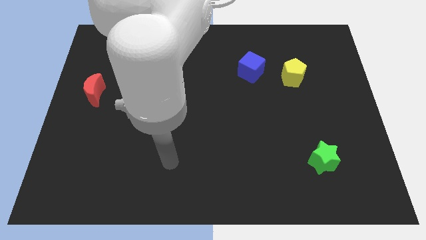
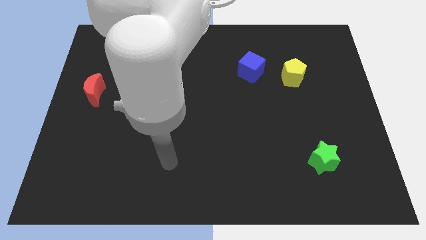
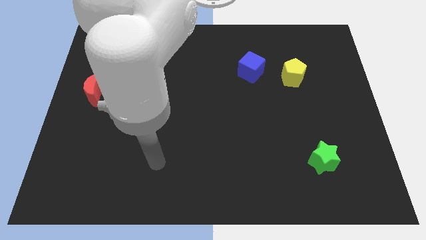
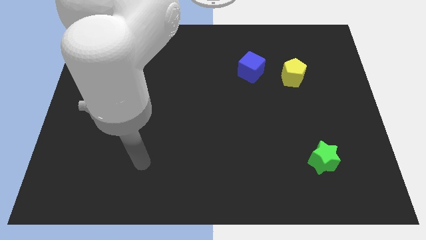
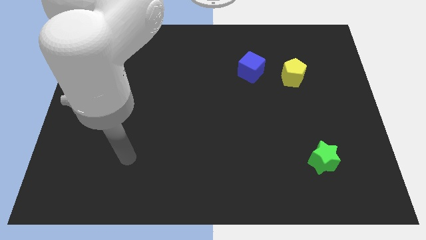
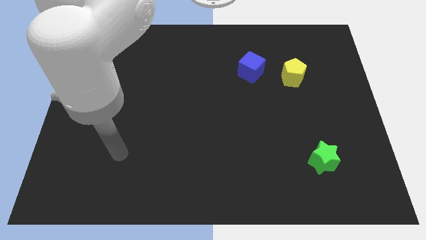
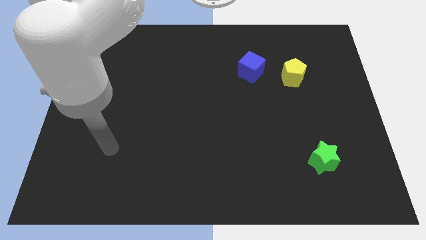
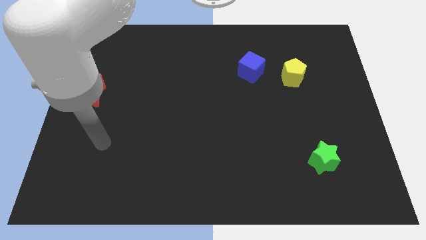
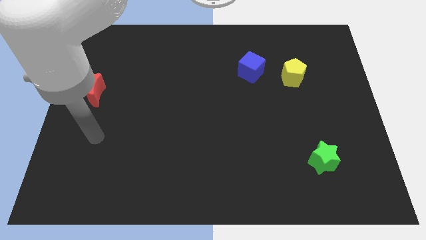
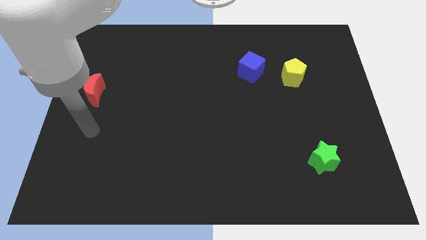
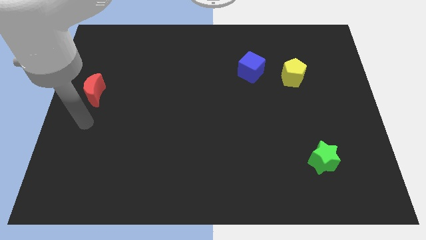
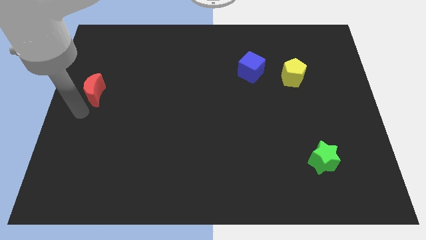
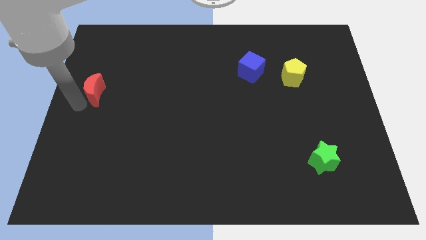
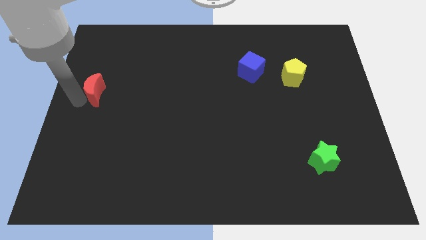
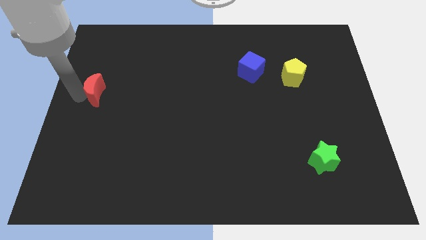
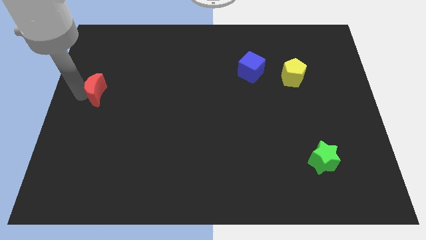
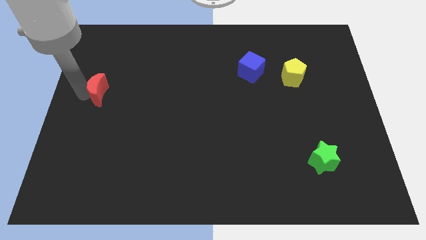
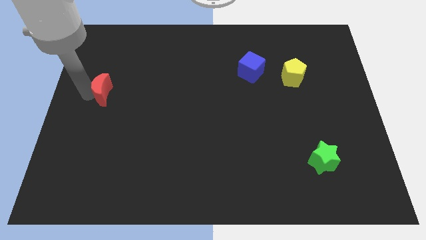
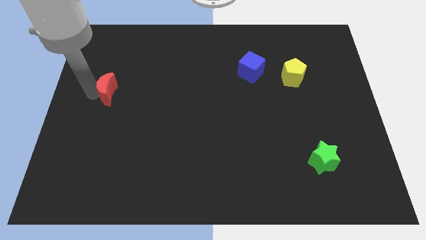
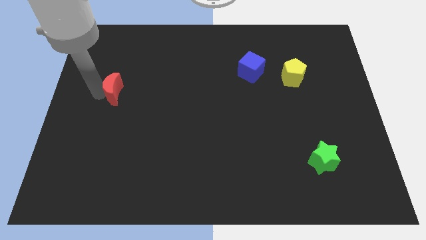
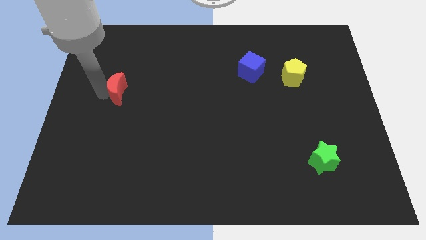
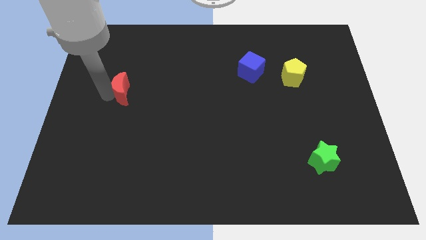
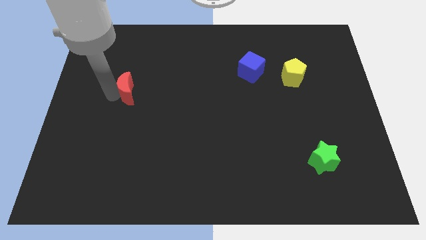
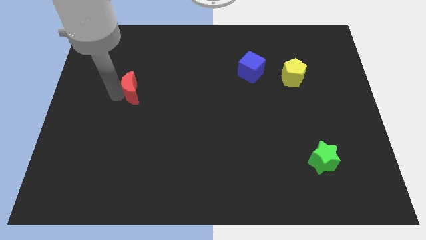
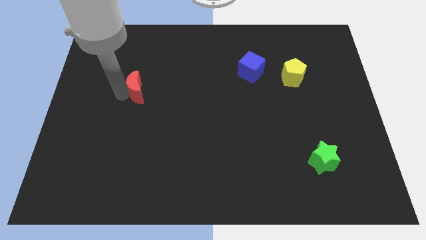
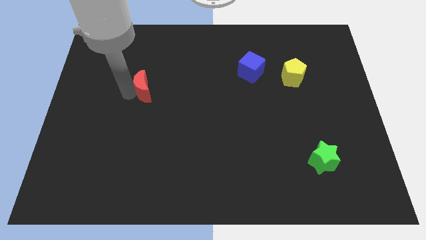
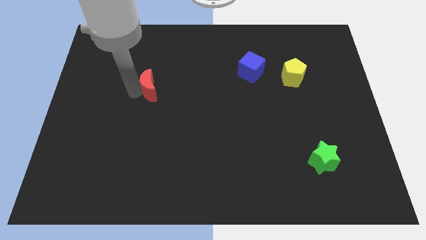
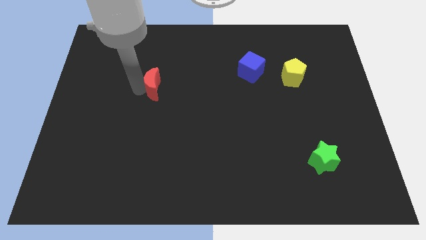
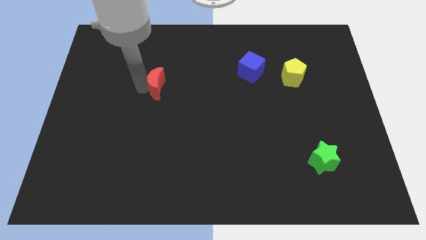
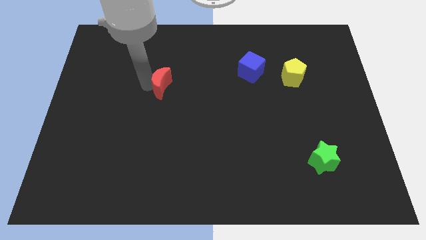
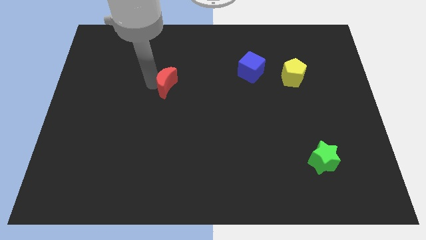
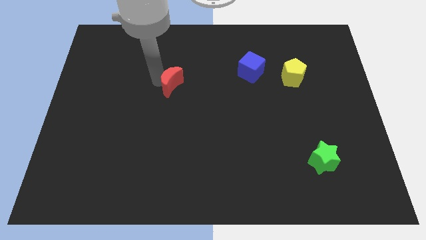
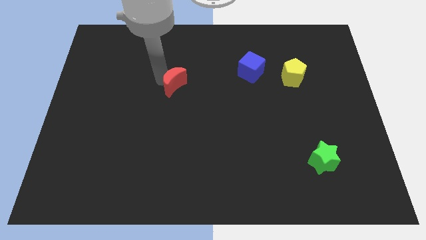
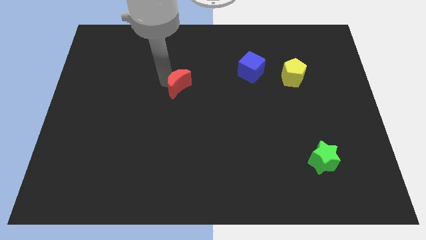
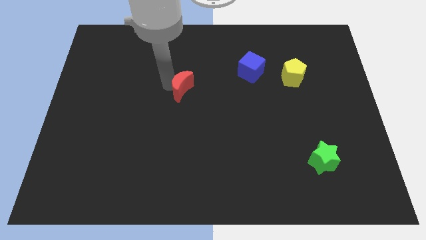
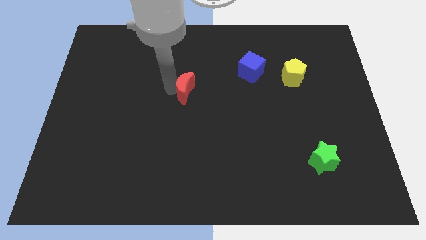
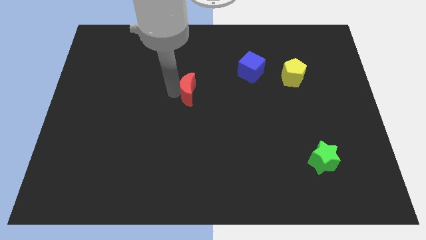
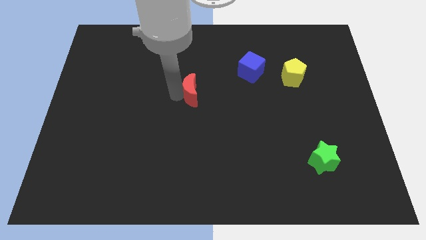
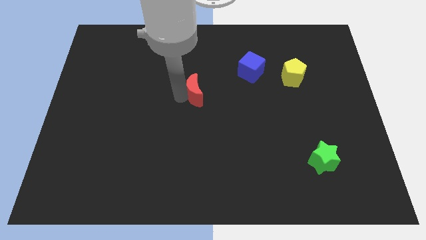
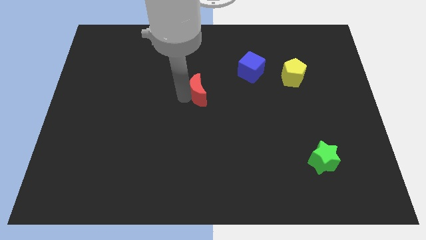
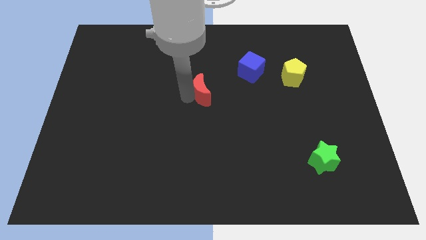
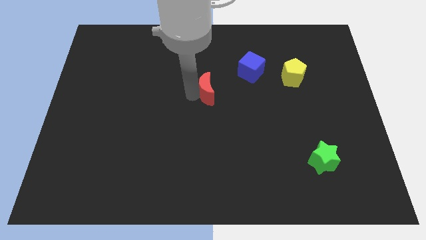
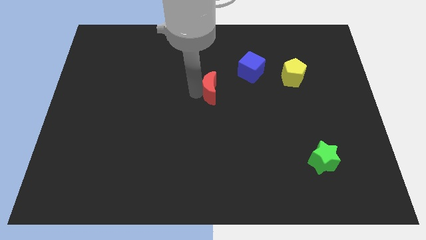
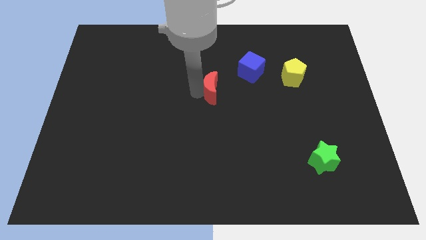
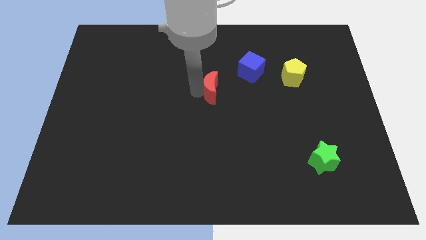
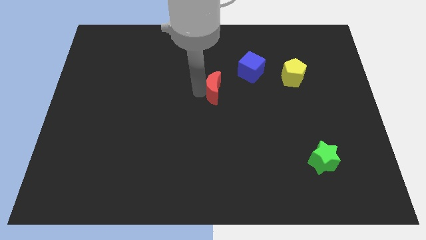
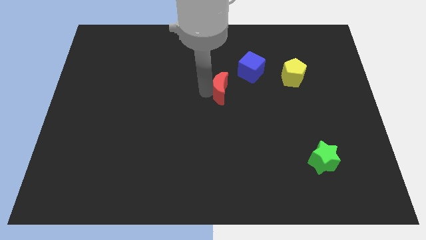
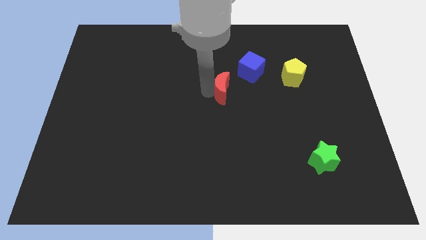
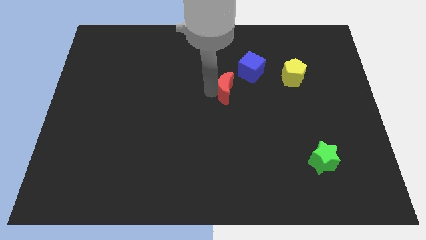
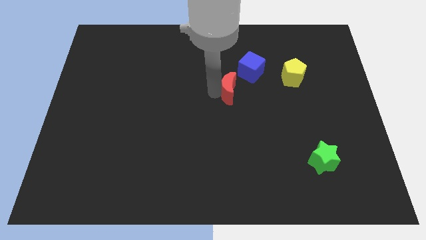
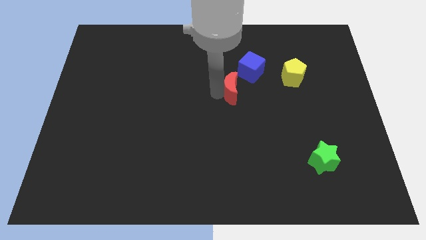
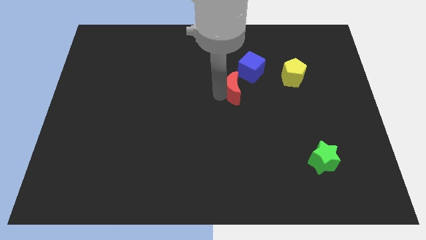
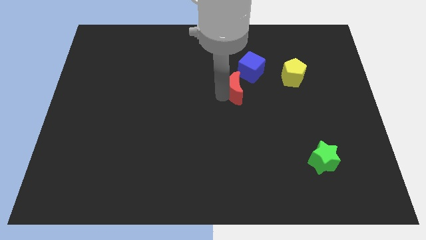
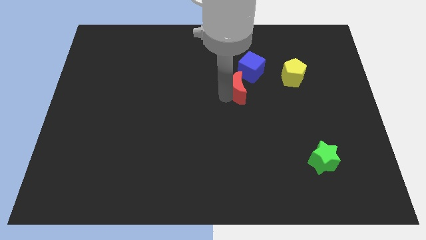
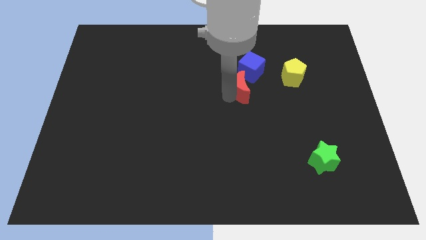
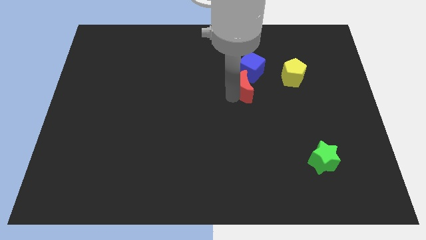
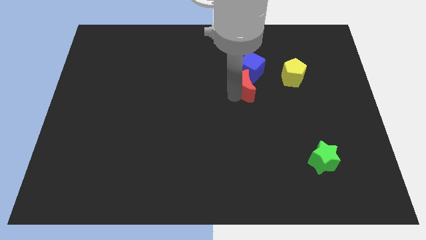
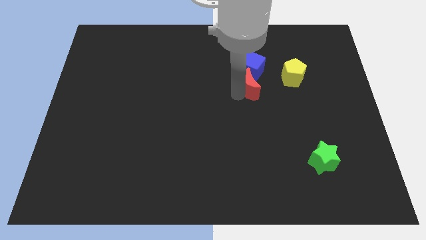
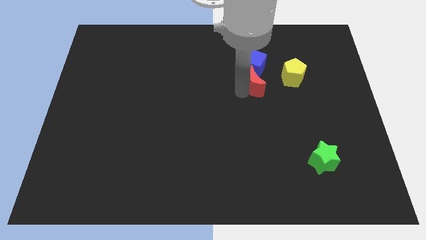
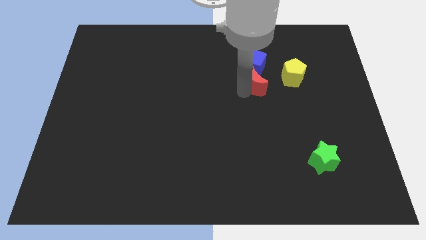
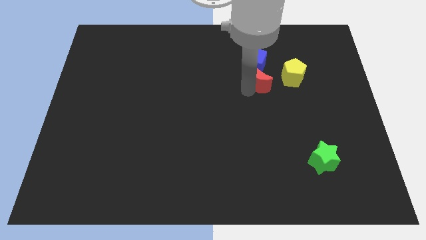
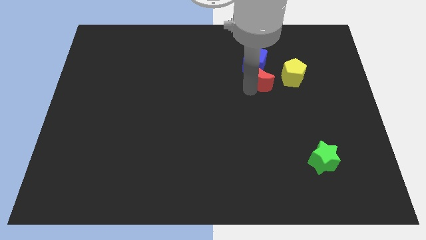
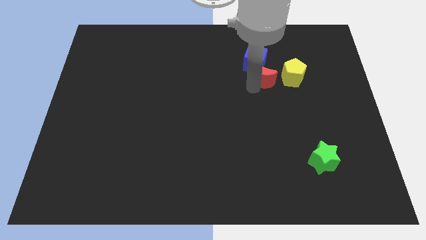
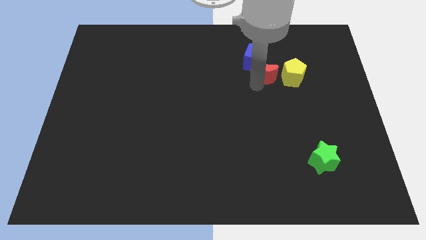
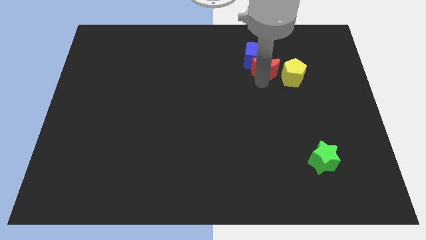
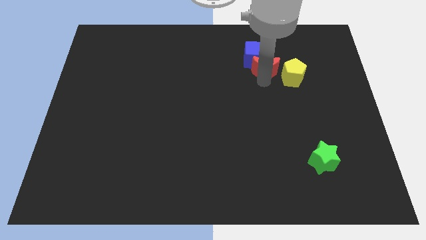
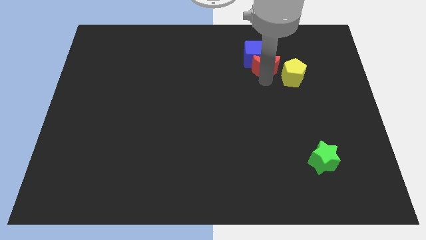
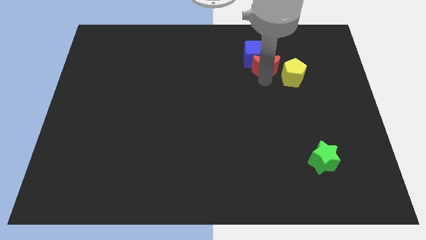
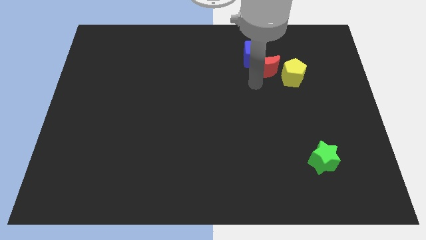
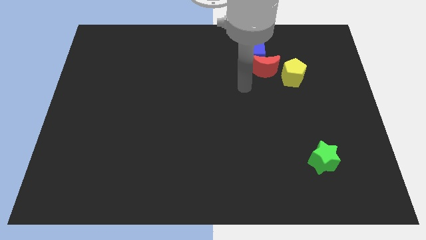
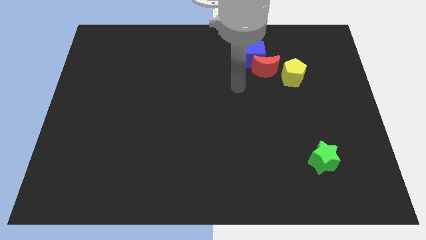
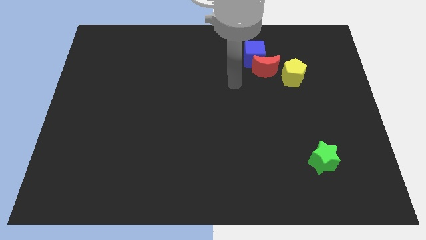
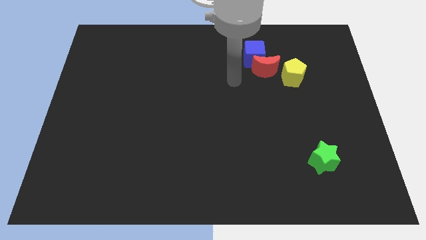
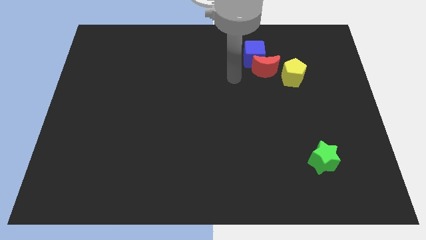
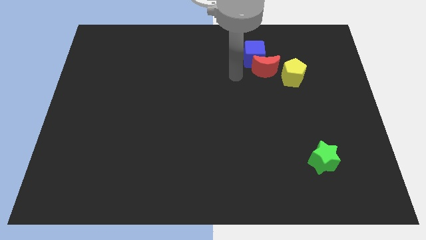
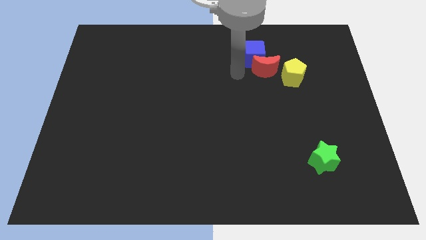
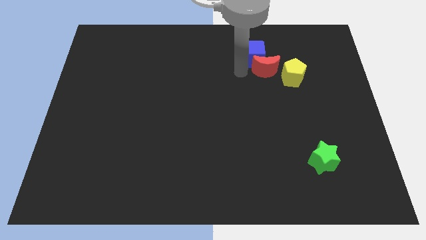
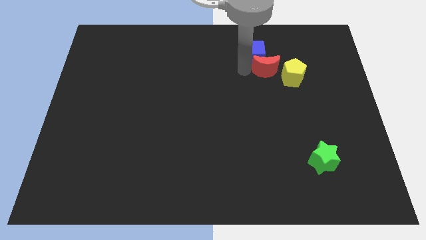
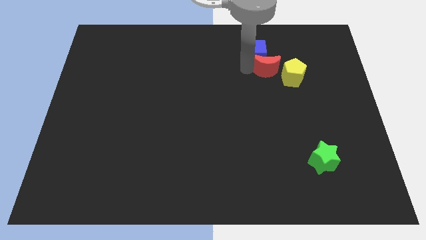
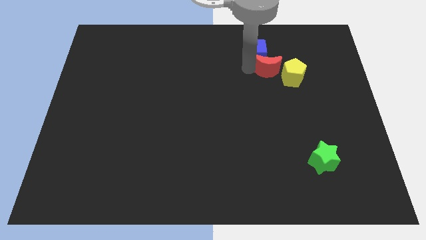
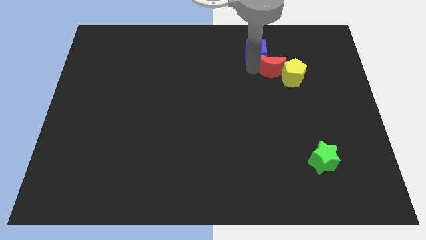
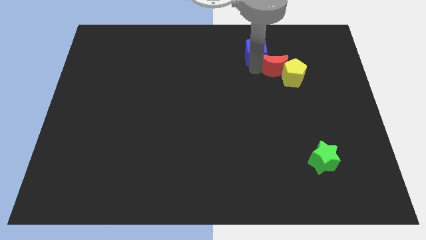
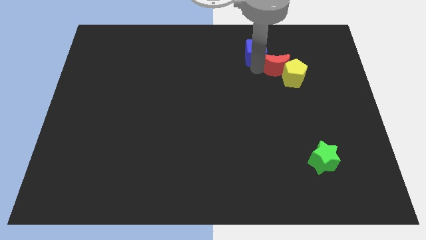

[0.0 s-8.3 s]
slide the moon close to the pentagon
